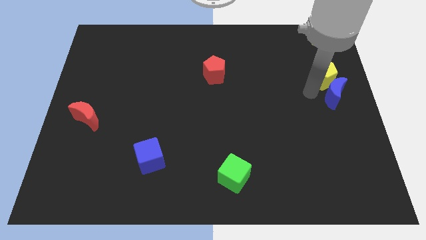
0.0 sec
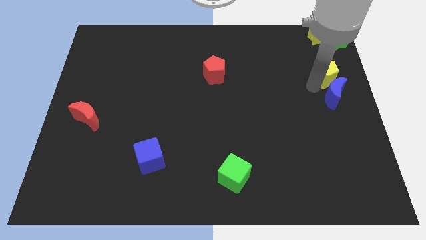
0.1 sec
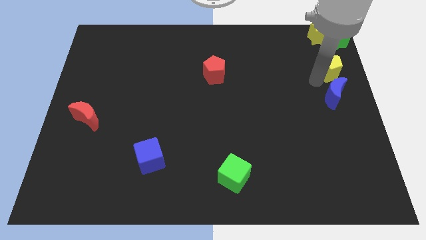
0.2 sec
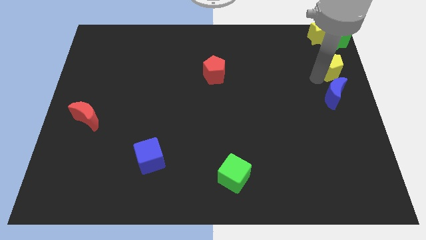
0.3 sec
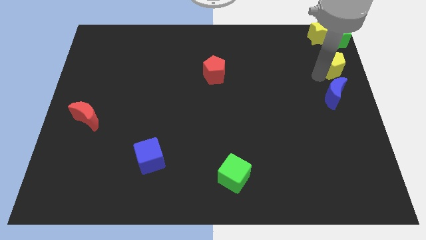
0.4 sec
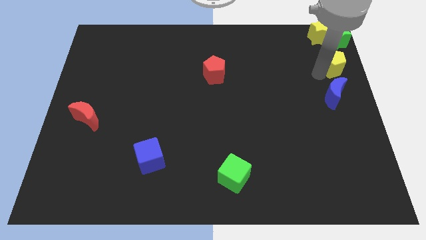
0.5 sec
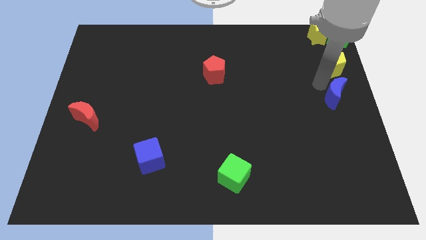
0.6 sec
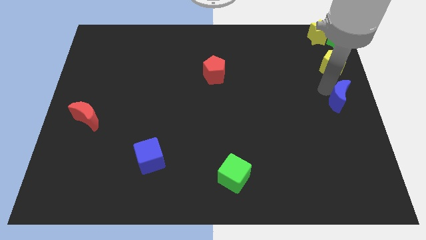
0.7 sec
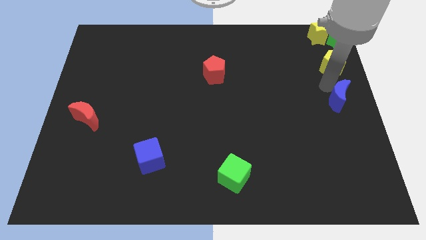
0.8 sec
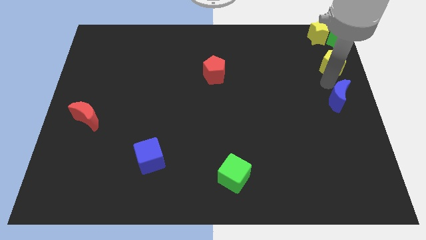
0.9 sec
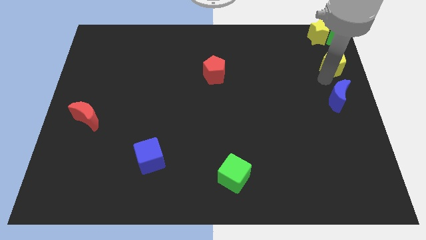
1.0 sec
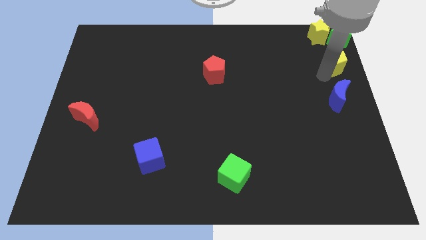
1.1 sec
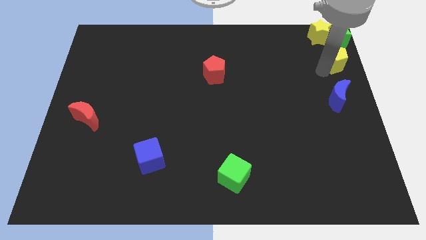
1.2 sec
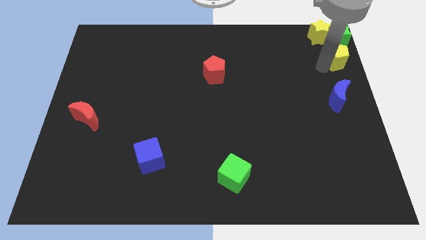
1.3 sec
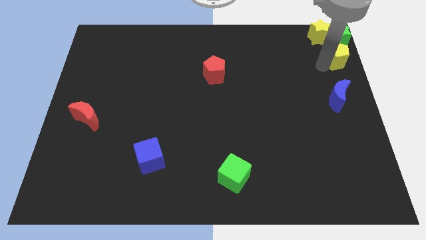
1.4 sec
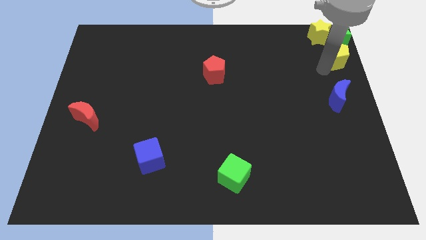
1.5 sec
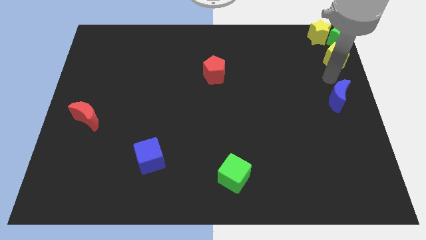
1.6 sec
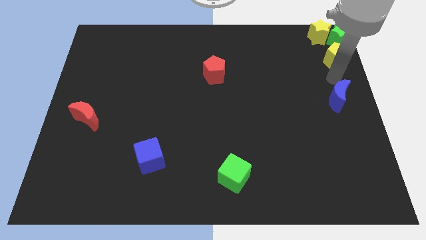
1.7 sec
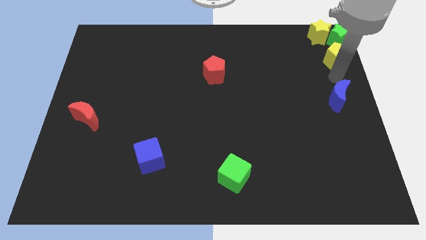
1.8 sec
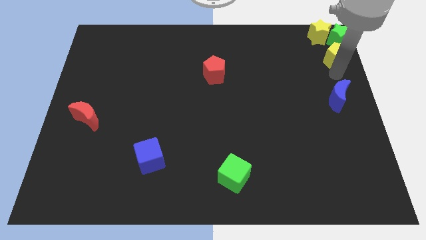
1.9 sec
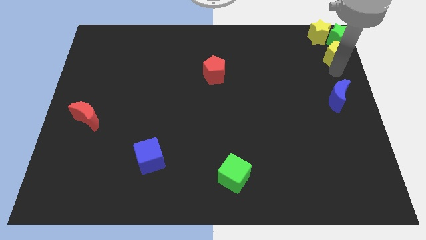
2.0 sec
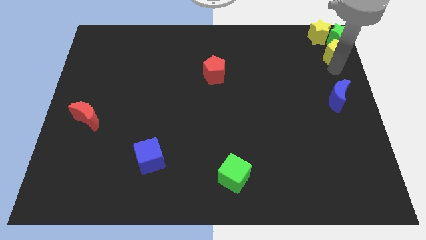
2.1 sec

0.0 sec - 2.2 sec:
place the yellow pentagon below the green star

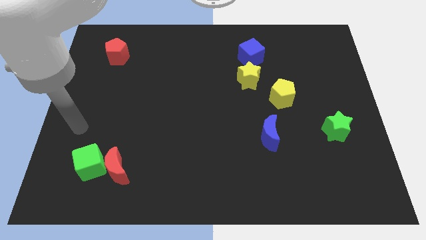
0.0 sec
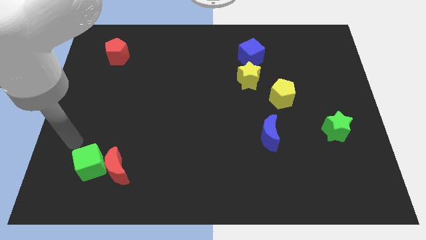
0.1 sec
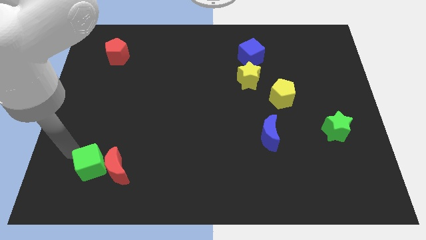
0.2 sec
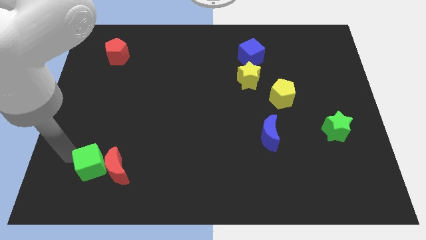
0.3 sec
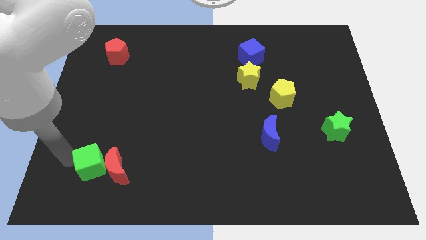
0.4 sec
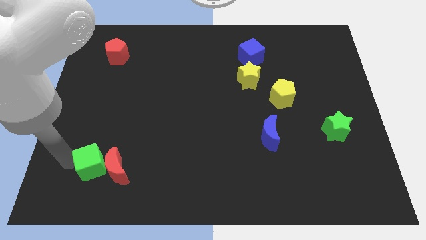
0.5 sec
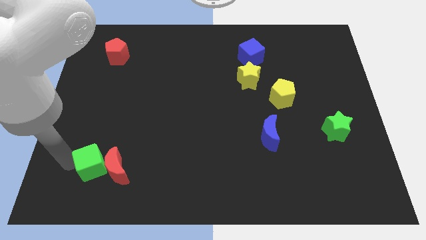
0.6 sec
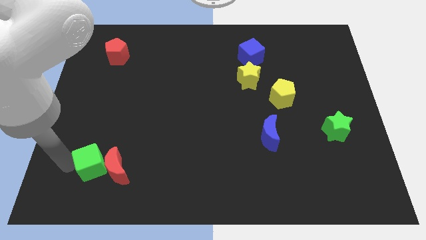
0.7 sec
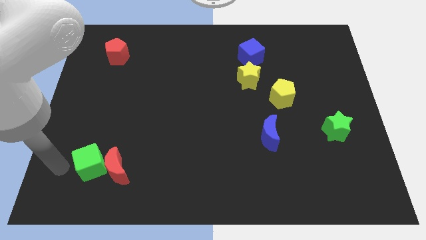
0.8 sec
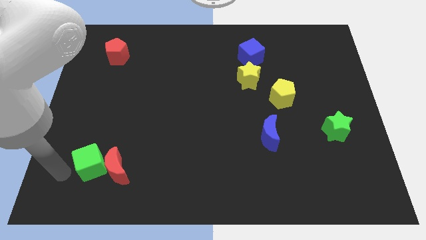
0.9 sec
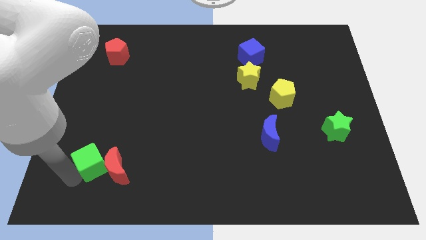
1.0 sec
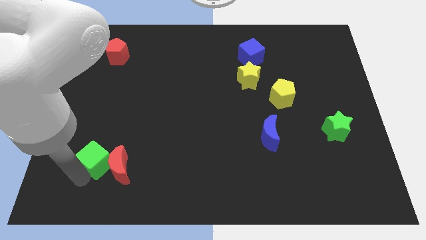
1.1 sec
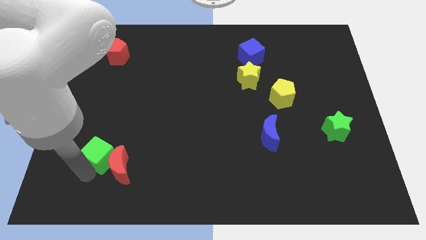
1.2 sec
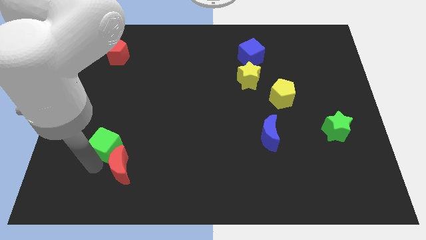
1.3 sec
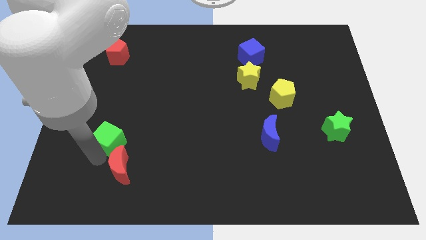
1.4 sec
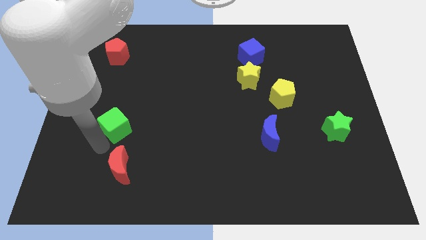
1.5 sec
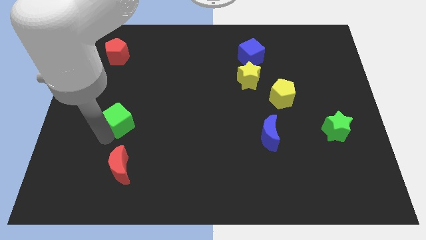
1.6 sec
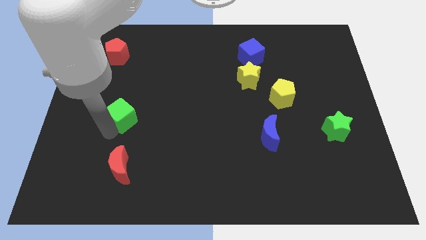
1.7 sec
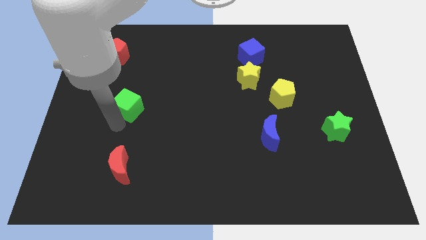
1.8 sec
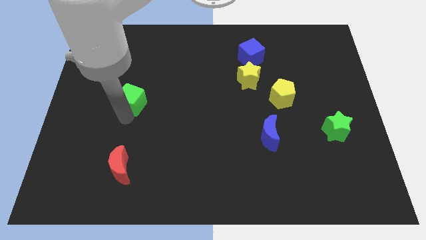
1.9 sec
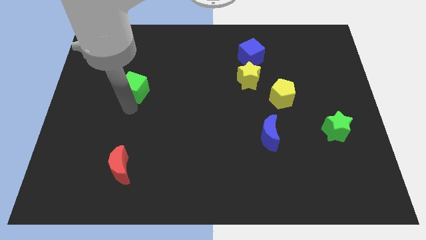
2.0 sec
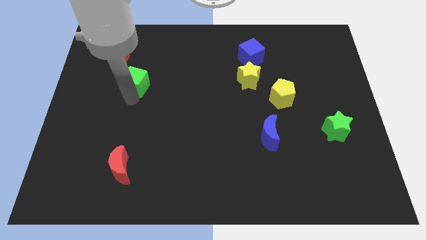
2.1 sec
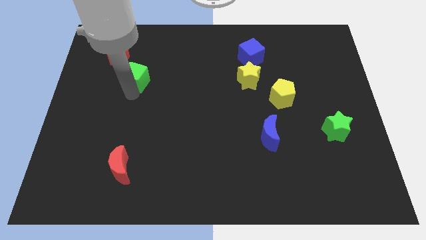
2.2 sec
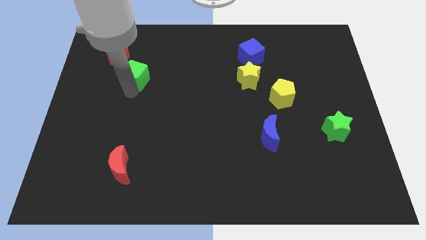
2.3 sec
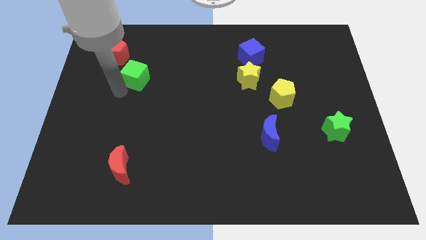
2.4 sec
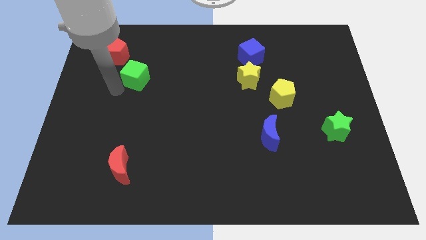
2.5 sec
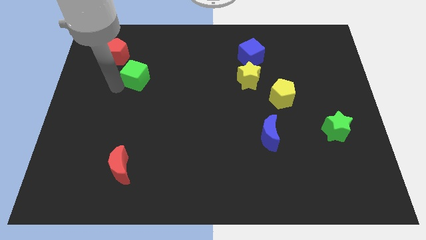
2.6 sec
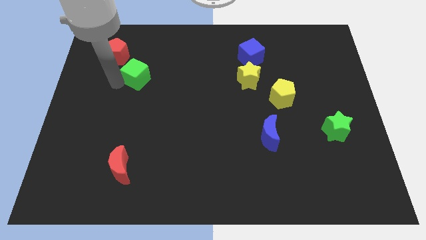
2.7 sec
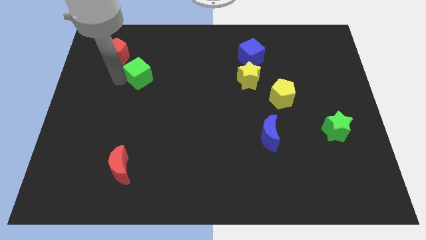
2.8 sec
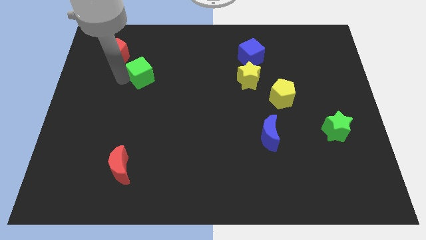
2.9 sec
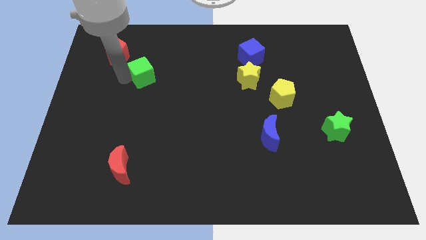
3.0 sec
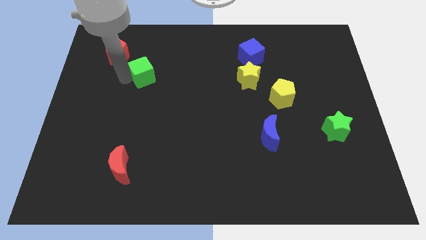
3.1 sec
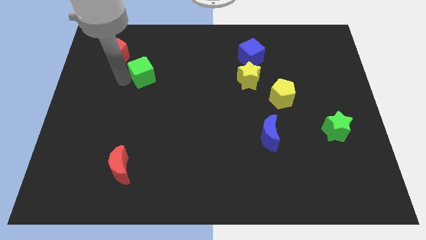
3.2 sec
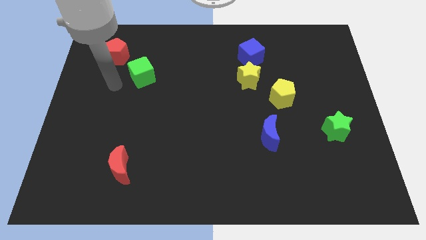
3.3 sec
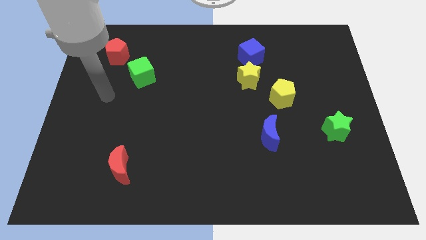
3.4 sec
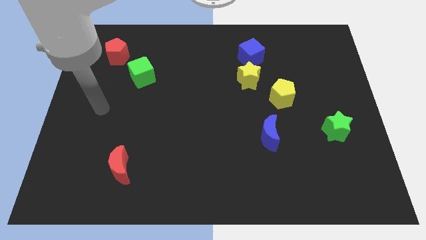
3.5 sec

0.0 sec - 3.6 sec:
push the green cube to the horizontal left side of the yellow star

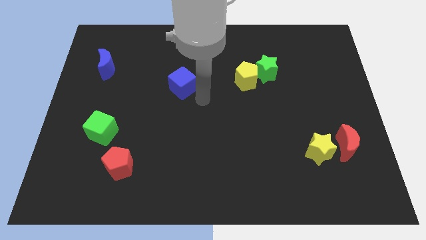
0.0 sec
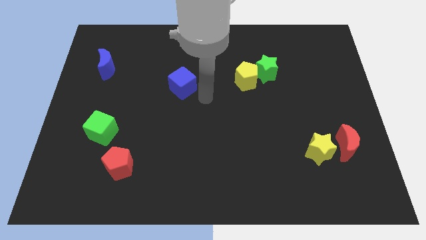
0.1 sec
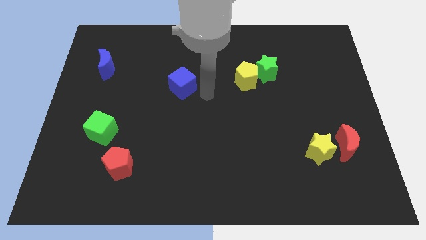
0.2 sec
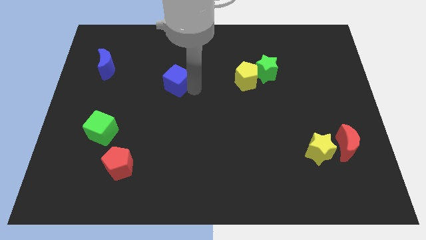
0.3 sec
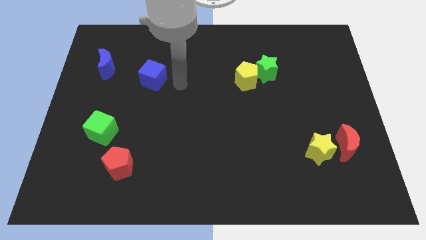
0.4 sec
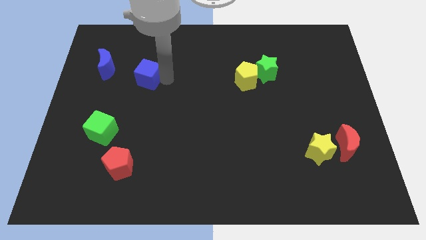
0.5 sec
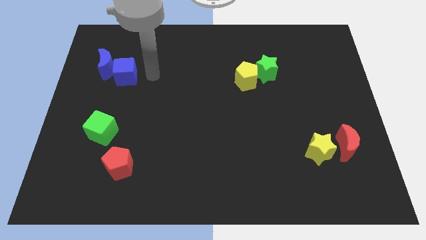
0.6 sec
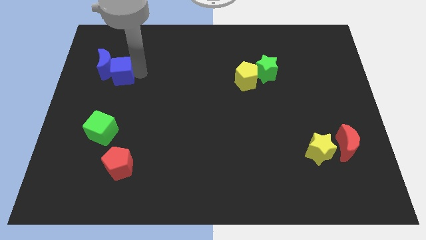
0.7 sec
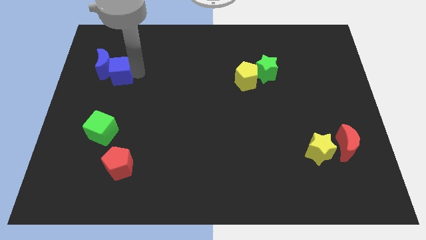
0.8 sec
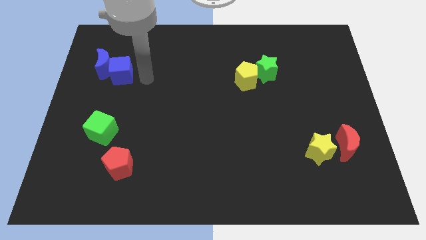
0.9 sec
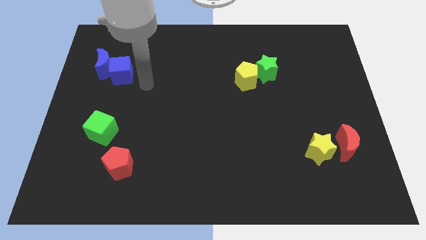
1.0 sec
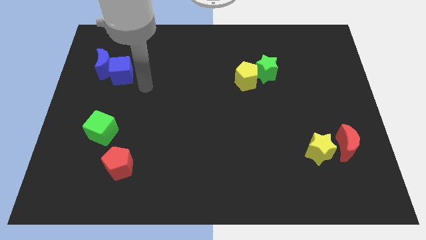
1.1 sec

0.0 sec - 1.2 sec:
push blue cube into blue crescent

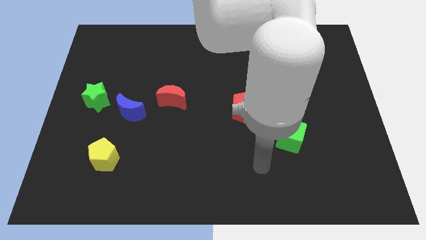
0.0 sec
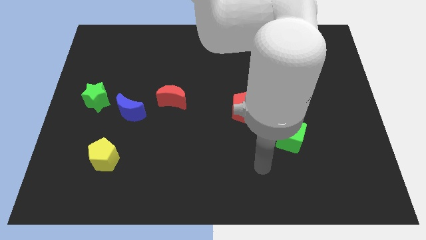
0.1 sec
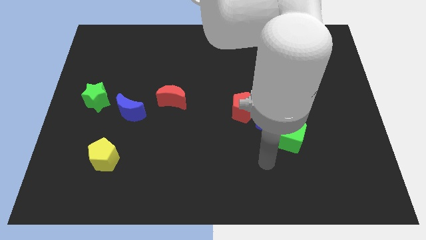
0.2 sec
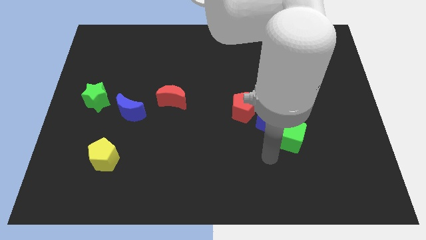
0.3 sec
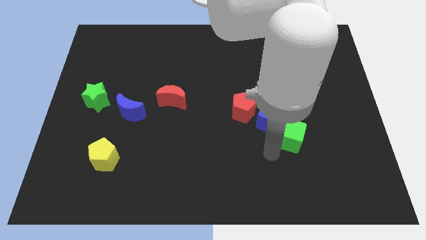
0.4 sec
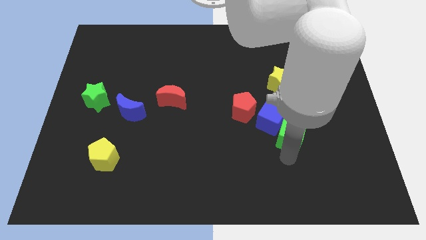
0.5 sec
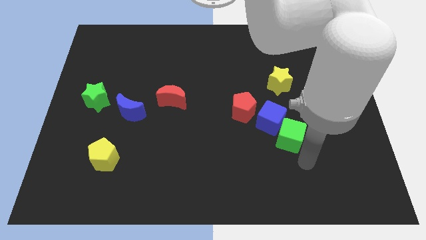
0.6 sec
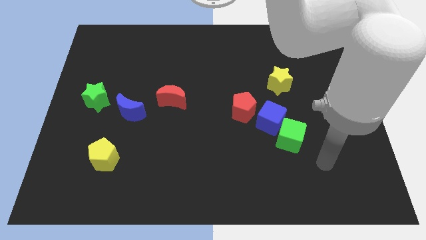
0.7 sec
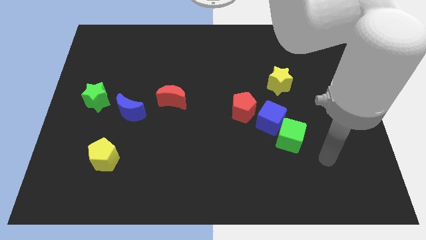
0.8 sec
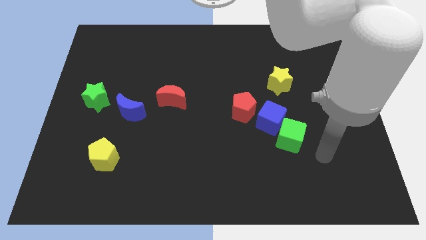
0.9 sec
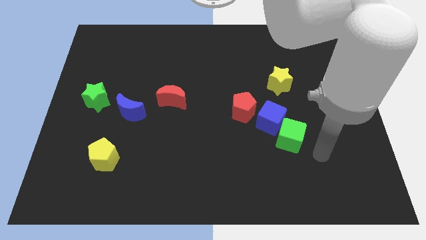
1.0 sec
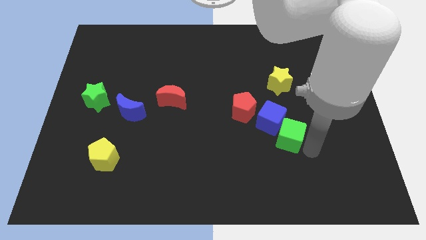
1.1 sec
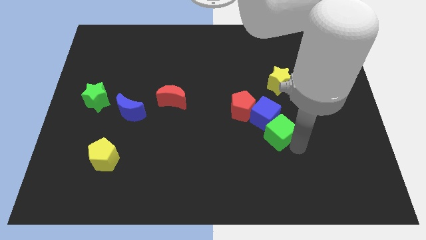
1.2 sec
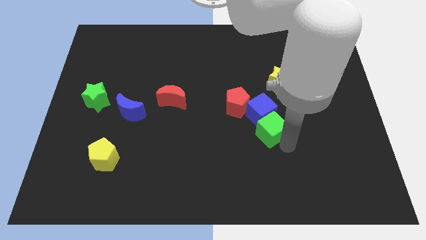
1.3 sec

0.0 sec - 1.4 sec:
move the green cube along with the blue cube into the red pentagon

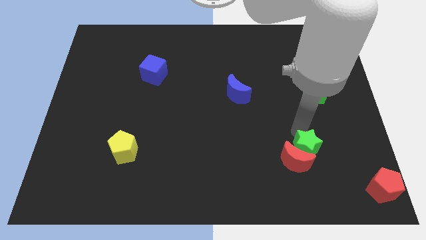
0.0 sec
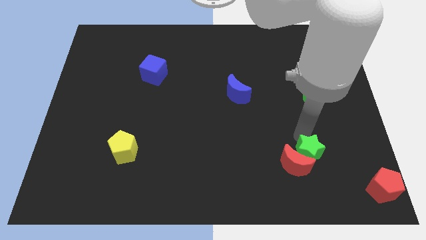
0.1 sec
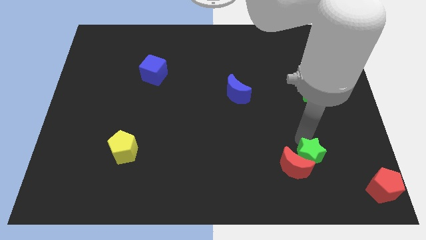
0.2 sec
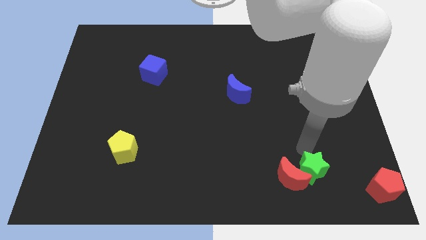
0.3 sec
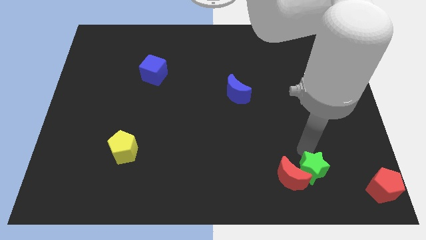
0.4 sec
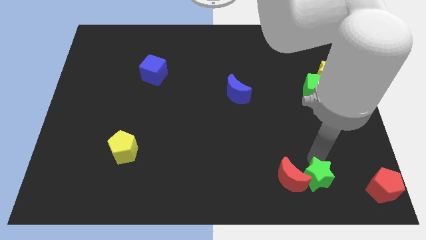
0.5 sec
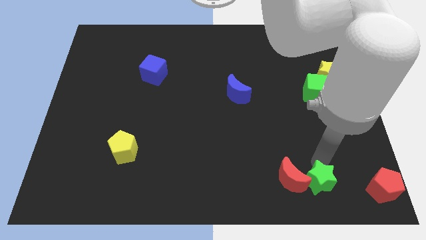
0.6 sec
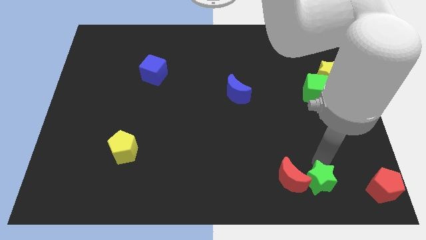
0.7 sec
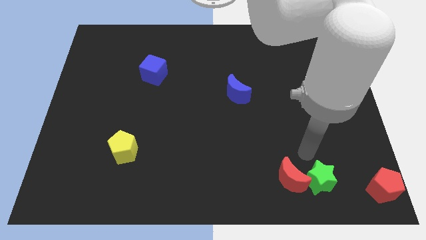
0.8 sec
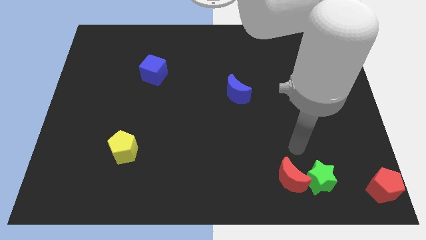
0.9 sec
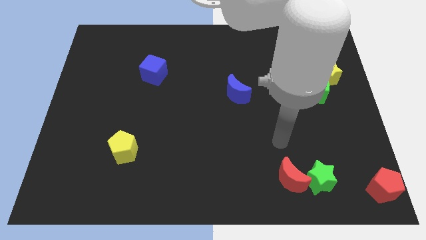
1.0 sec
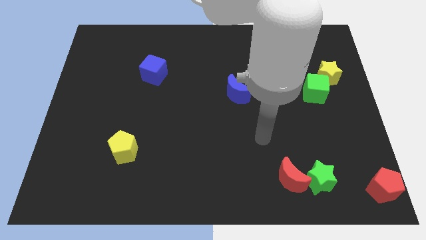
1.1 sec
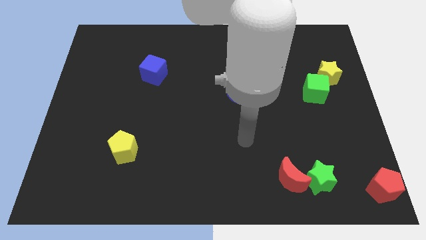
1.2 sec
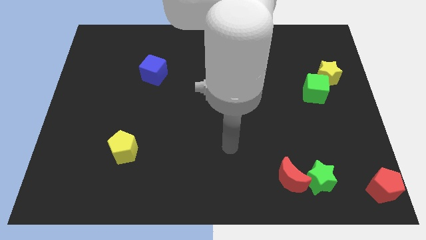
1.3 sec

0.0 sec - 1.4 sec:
push the green star into the red crescent
